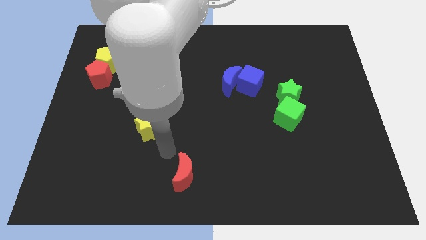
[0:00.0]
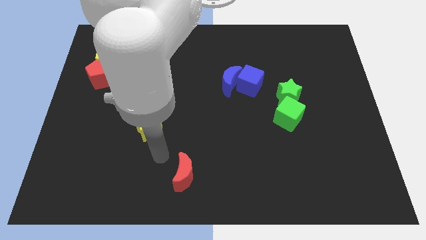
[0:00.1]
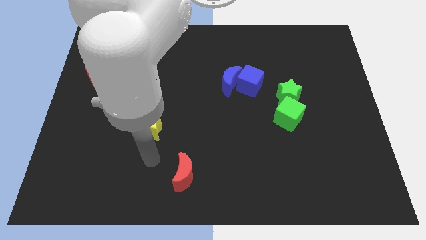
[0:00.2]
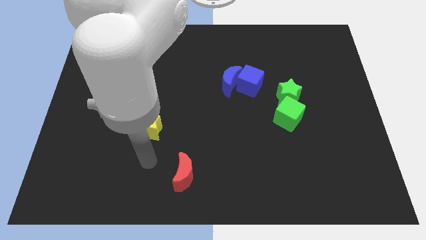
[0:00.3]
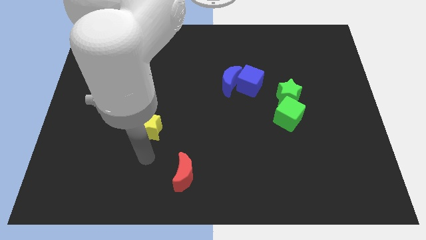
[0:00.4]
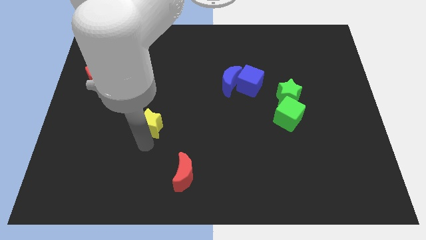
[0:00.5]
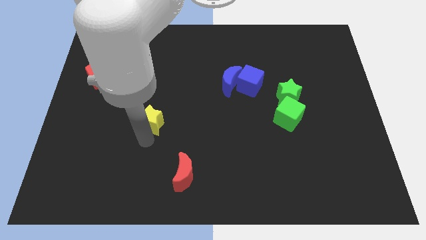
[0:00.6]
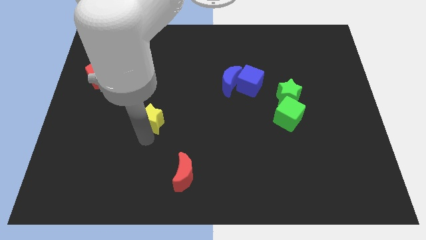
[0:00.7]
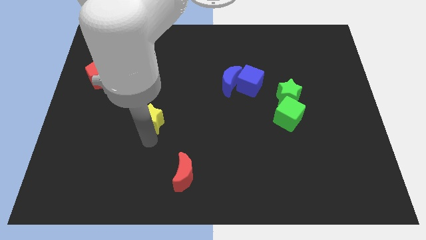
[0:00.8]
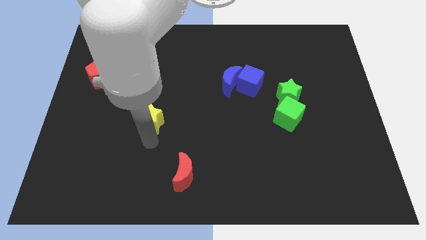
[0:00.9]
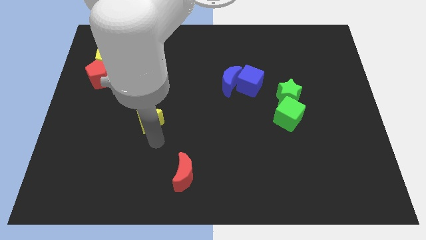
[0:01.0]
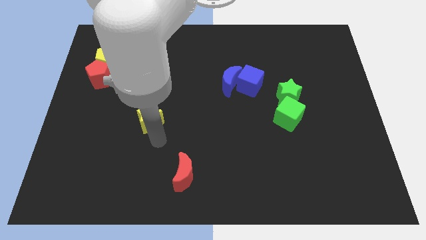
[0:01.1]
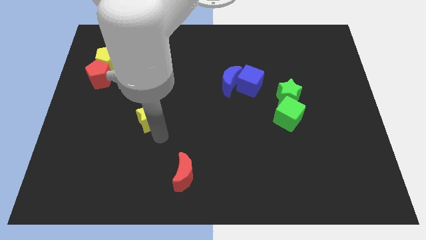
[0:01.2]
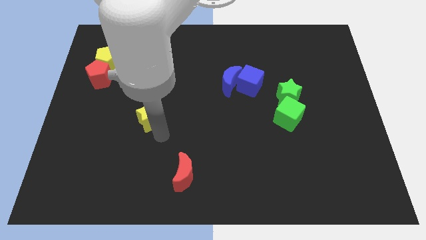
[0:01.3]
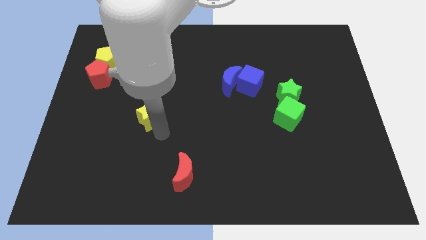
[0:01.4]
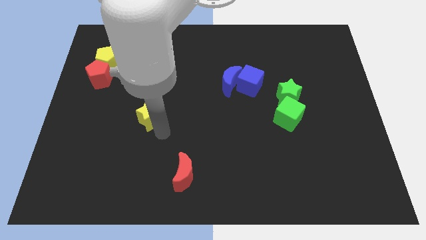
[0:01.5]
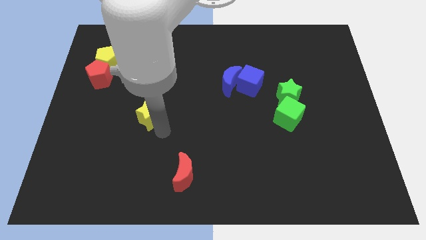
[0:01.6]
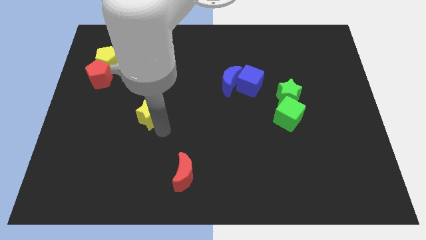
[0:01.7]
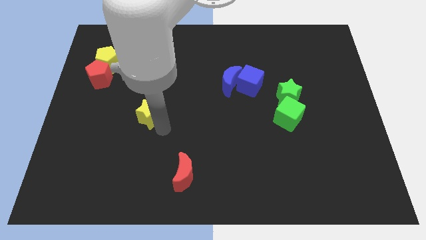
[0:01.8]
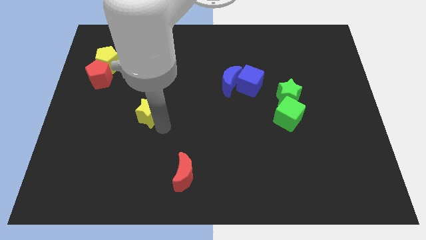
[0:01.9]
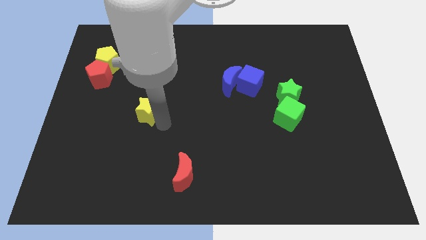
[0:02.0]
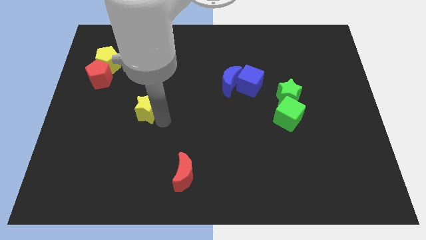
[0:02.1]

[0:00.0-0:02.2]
push the yellow star slightly to the top

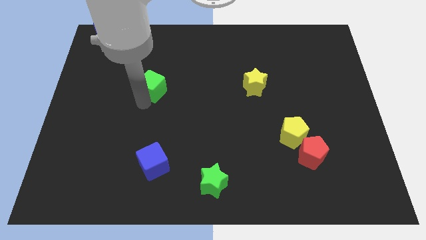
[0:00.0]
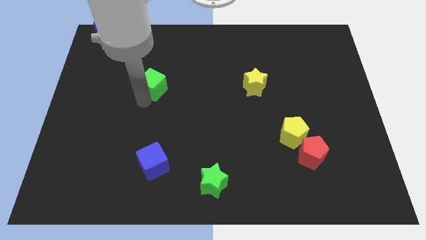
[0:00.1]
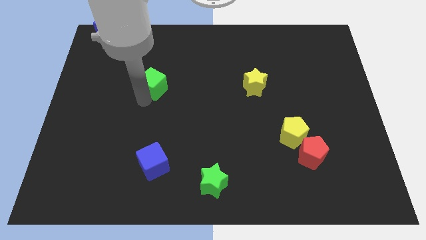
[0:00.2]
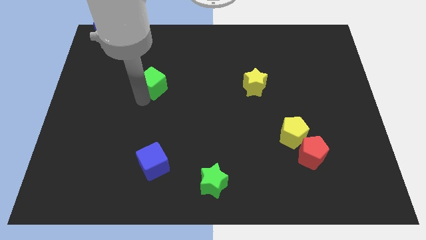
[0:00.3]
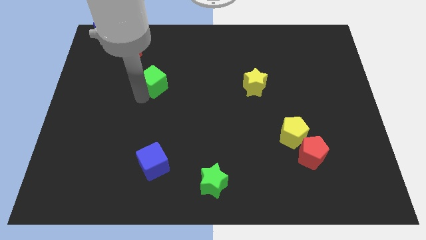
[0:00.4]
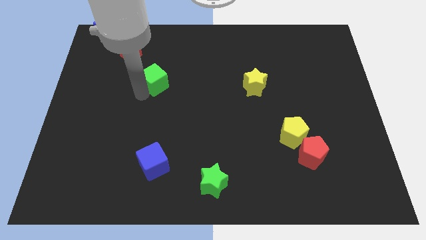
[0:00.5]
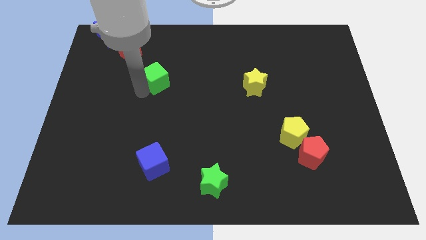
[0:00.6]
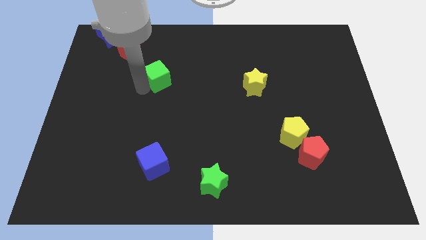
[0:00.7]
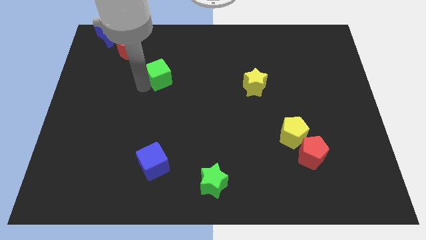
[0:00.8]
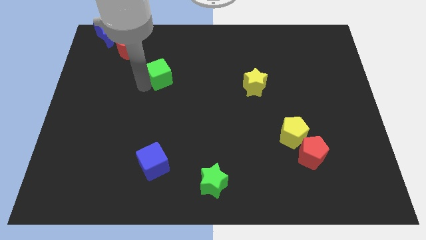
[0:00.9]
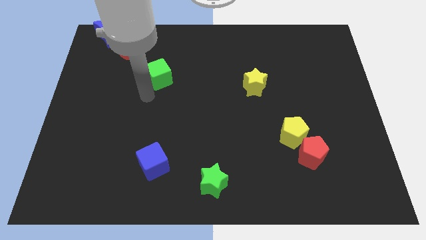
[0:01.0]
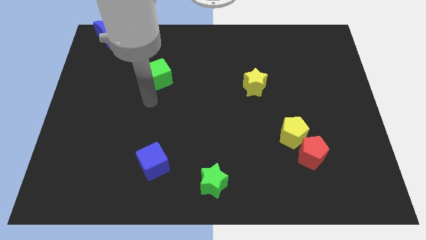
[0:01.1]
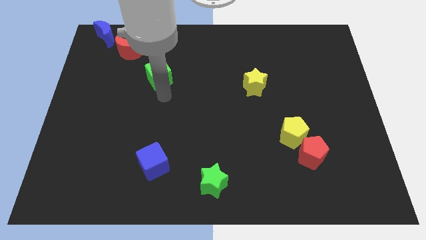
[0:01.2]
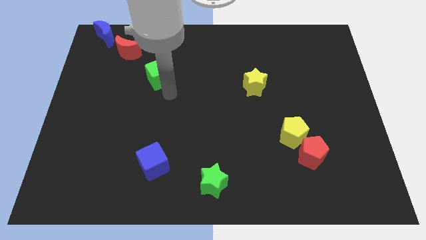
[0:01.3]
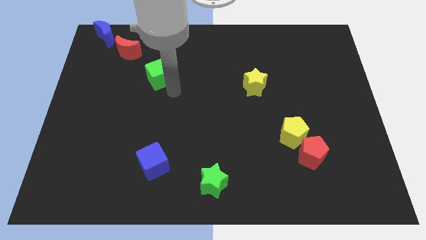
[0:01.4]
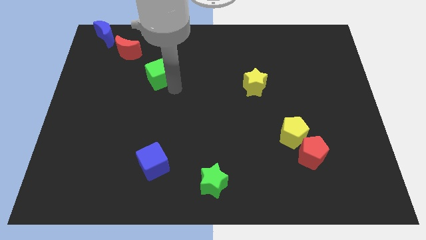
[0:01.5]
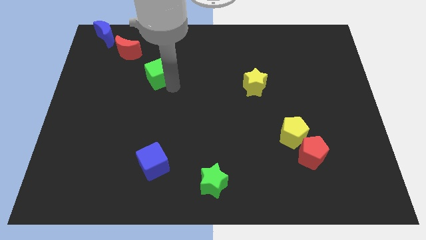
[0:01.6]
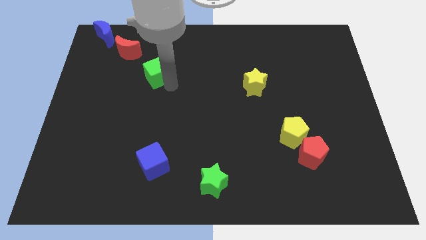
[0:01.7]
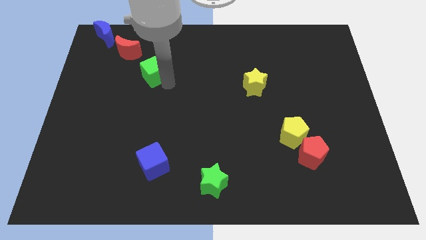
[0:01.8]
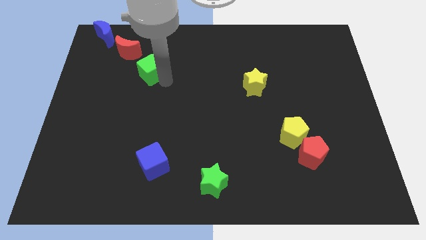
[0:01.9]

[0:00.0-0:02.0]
push the green cube close to the red moon

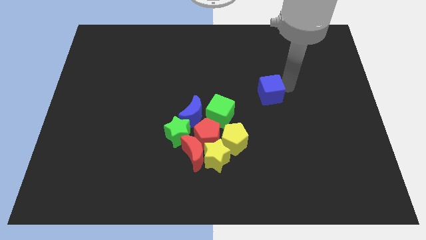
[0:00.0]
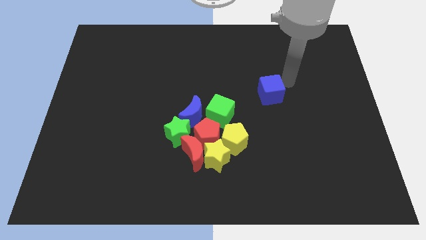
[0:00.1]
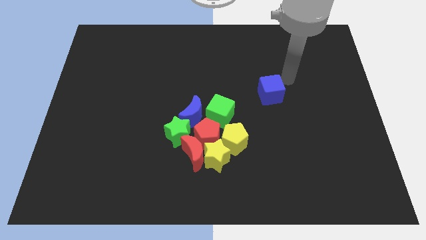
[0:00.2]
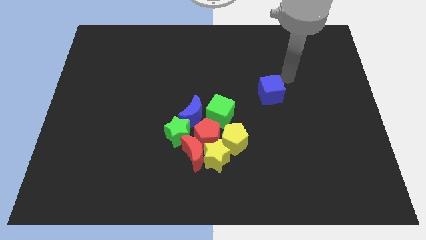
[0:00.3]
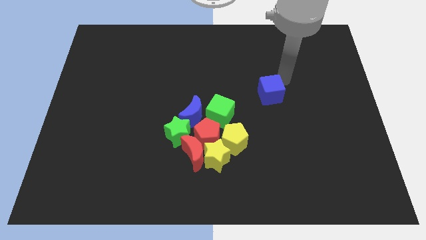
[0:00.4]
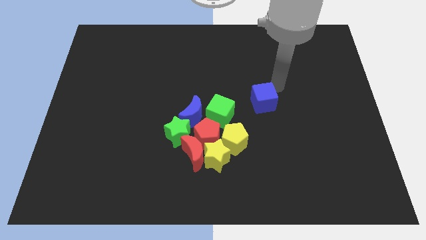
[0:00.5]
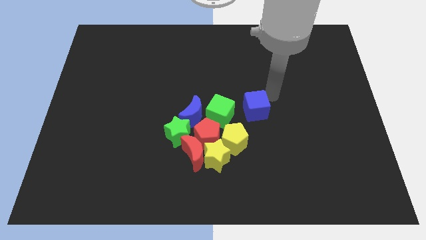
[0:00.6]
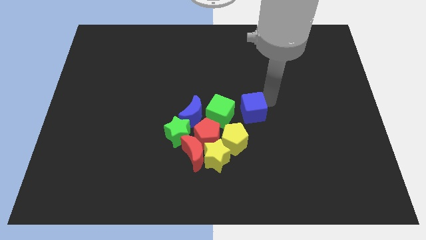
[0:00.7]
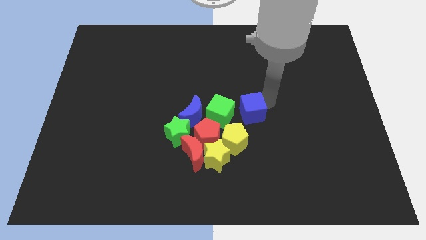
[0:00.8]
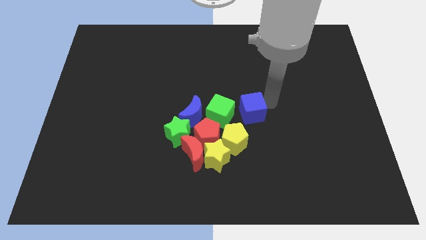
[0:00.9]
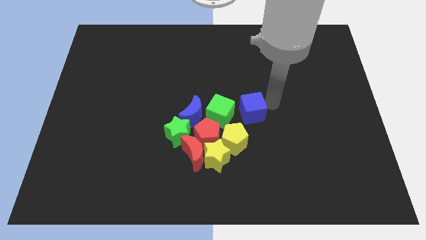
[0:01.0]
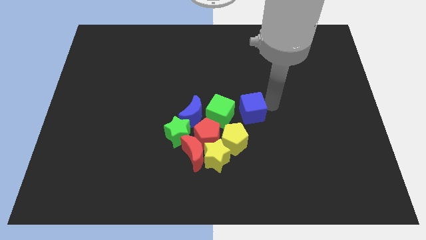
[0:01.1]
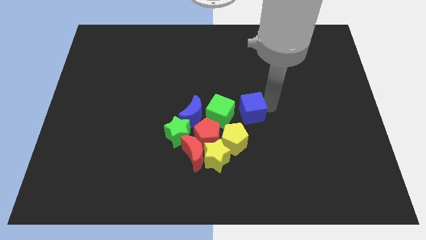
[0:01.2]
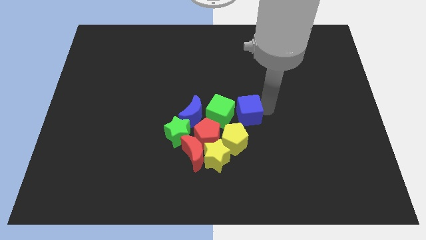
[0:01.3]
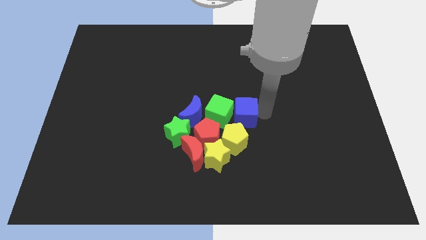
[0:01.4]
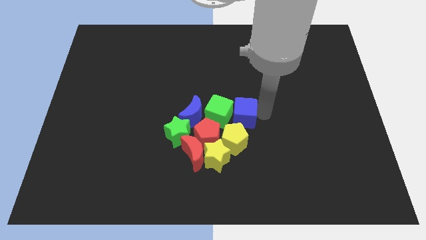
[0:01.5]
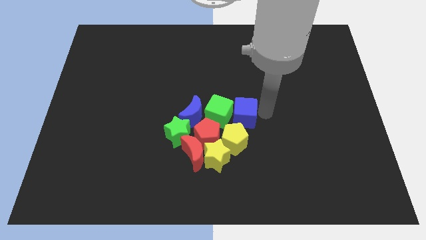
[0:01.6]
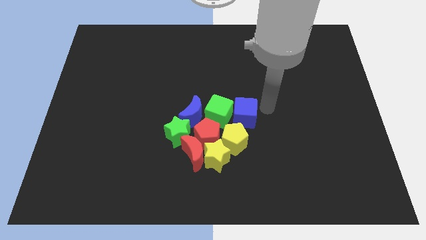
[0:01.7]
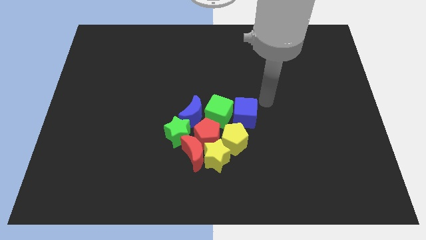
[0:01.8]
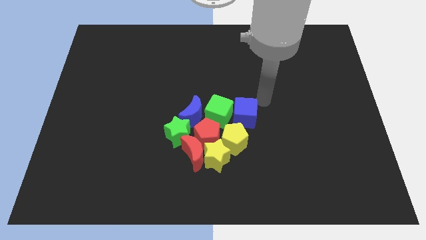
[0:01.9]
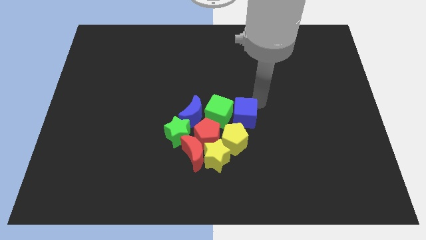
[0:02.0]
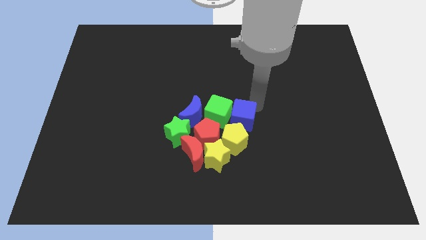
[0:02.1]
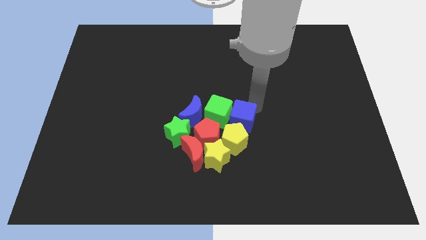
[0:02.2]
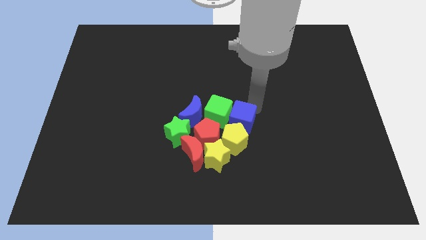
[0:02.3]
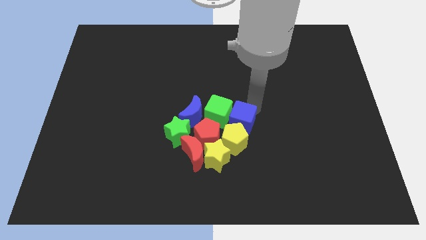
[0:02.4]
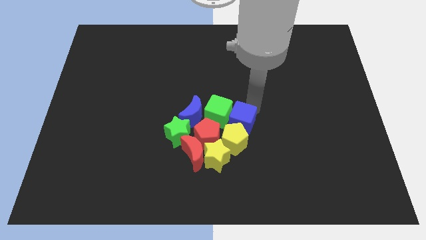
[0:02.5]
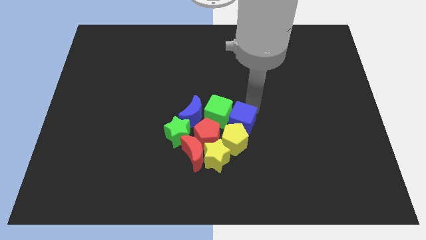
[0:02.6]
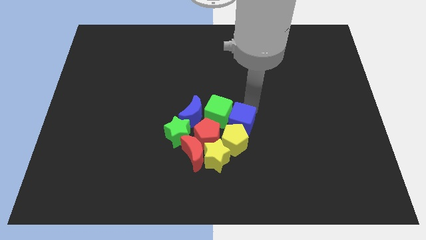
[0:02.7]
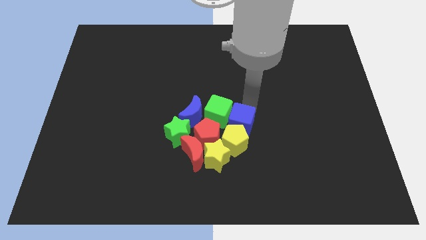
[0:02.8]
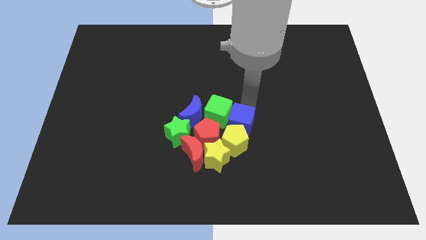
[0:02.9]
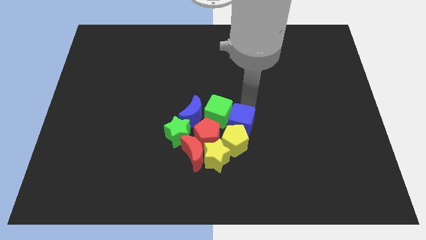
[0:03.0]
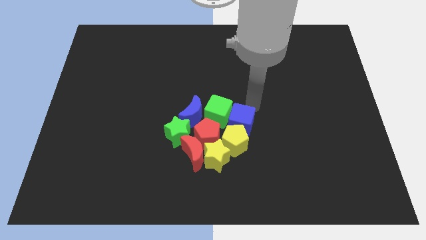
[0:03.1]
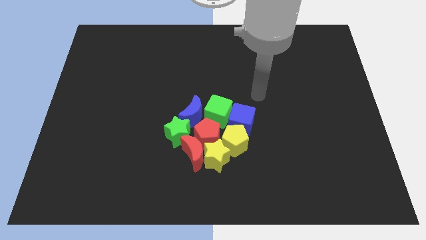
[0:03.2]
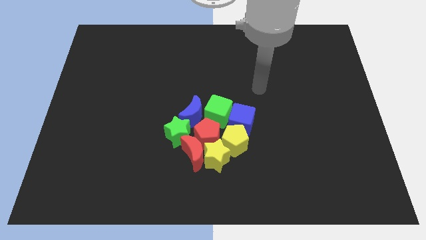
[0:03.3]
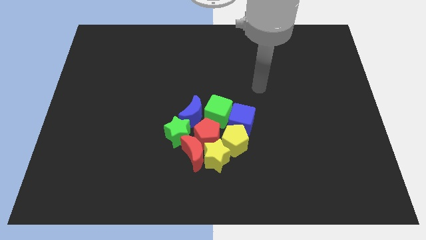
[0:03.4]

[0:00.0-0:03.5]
move the blue cube into group of blocks

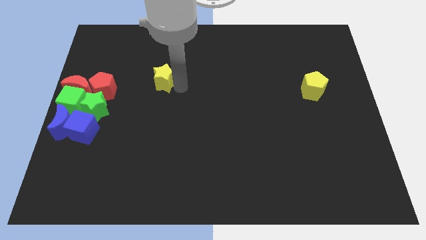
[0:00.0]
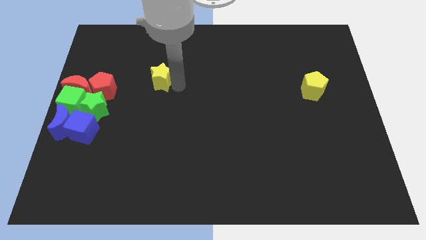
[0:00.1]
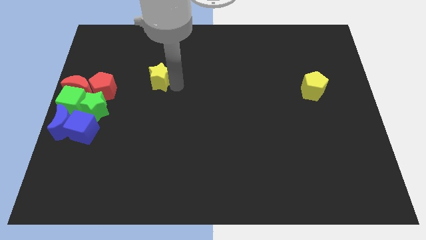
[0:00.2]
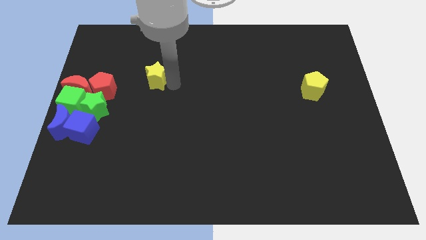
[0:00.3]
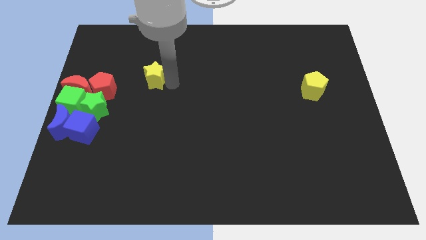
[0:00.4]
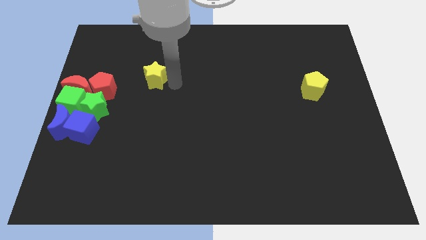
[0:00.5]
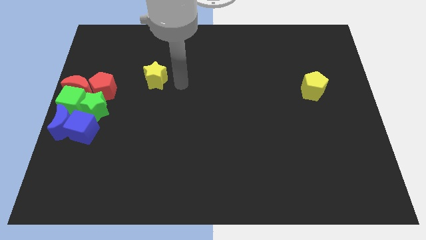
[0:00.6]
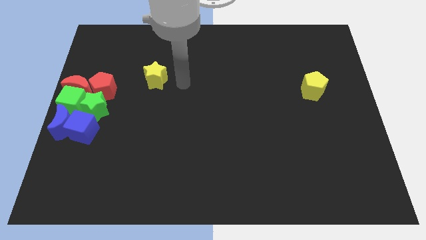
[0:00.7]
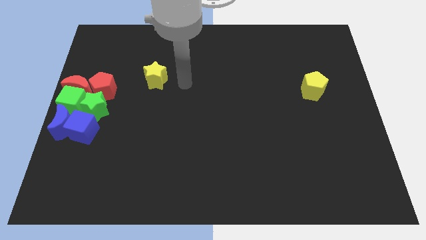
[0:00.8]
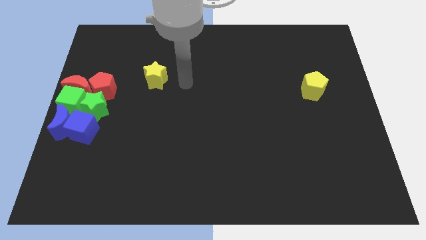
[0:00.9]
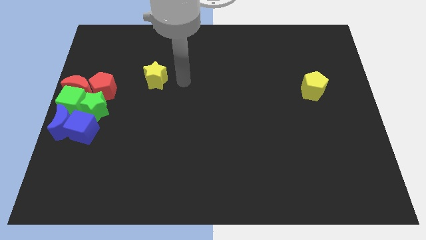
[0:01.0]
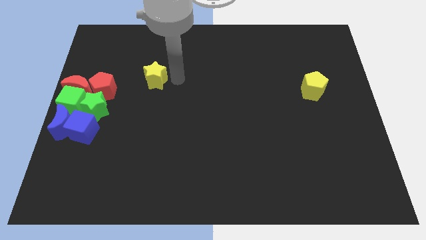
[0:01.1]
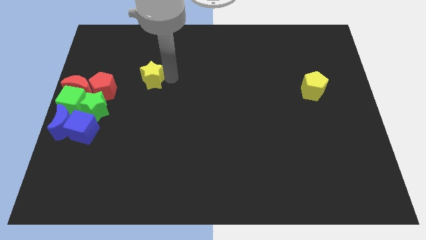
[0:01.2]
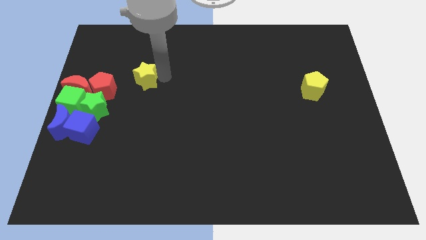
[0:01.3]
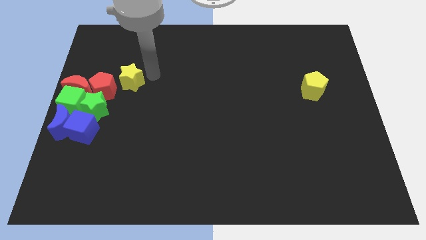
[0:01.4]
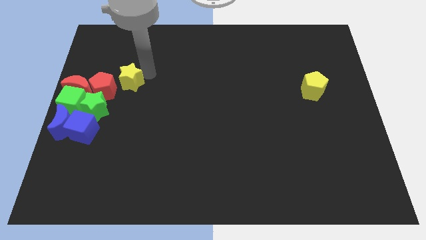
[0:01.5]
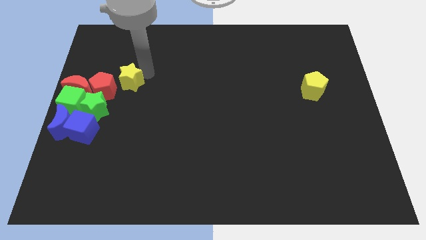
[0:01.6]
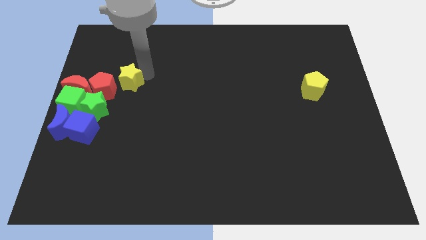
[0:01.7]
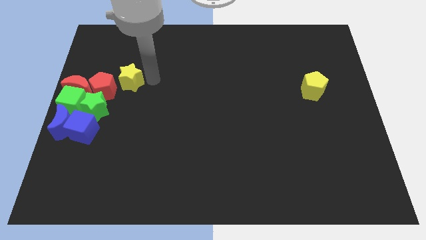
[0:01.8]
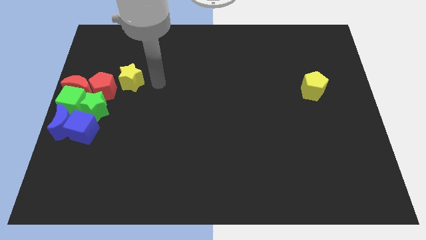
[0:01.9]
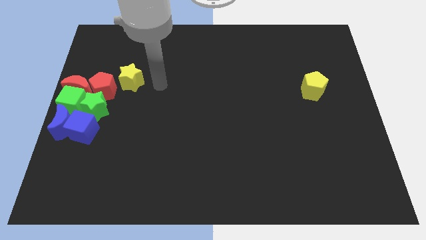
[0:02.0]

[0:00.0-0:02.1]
place the yellow star to the top right of the red pentagon
